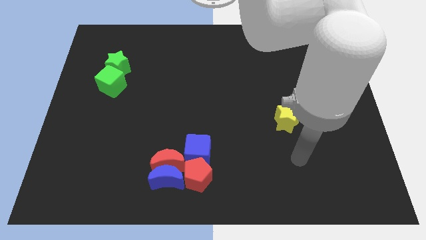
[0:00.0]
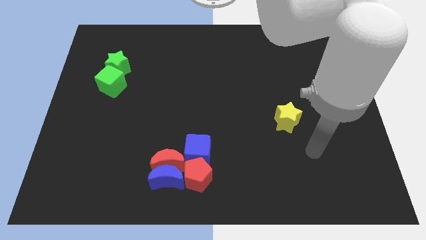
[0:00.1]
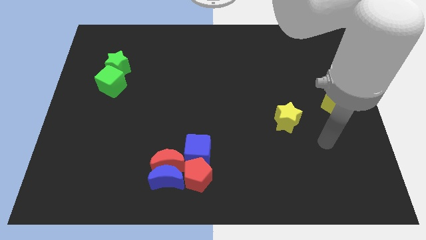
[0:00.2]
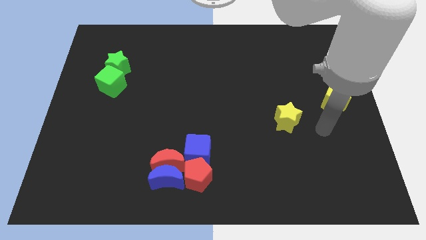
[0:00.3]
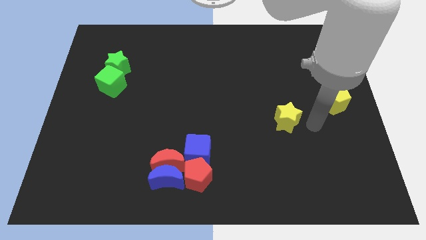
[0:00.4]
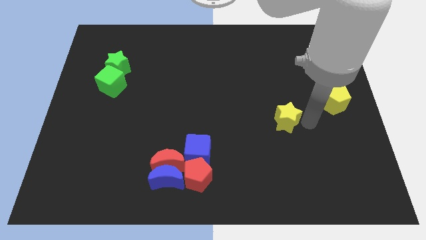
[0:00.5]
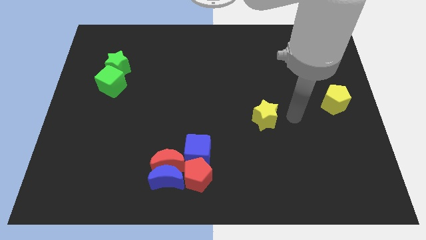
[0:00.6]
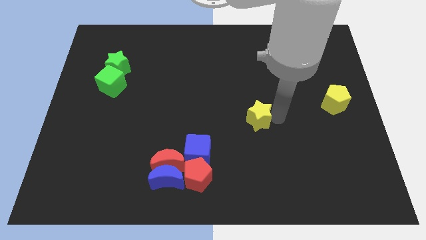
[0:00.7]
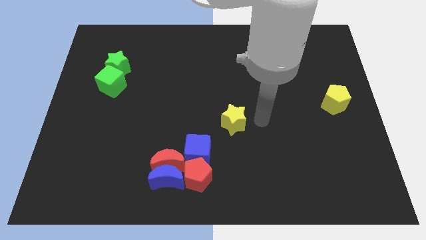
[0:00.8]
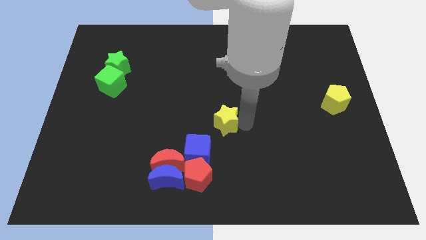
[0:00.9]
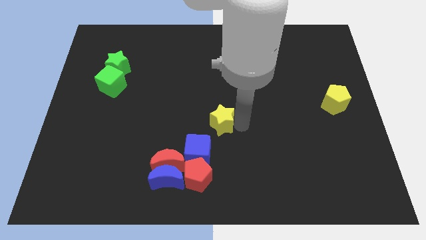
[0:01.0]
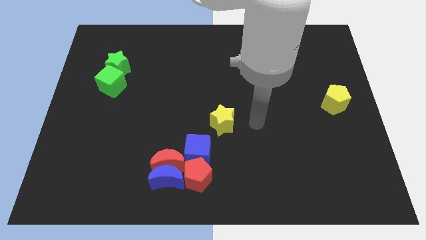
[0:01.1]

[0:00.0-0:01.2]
place the yellow star at the center of the board

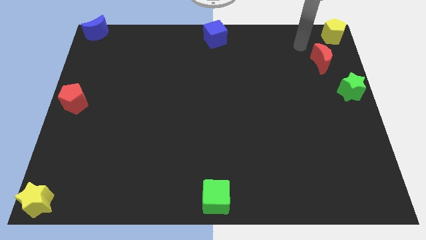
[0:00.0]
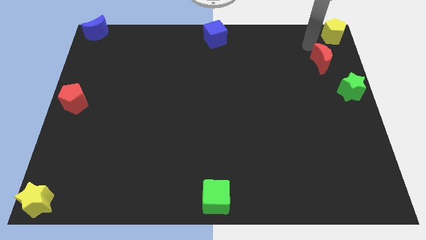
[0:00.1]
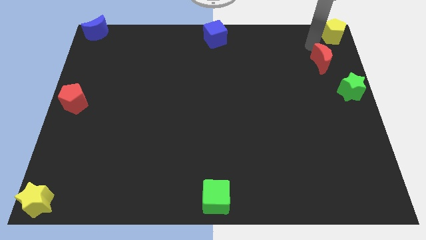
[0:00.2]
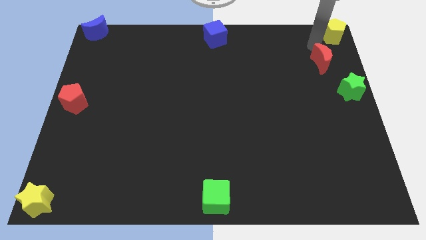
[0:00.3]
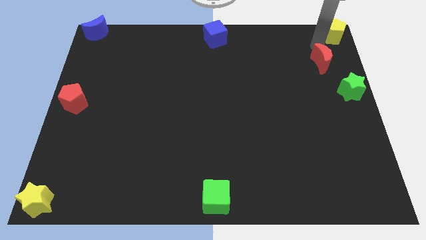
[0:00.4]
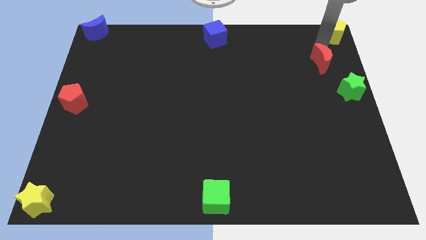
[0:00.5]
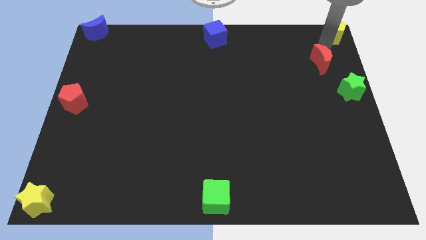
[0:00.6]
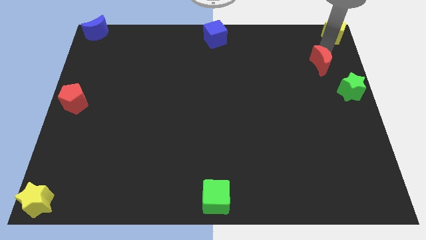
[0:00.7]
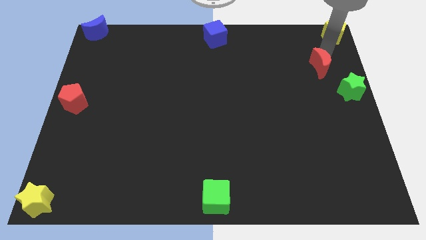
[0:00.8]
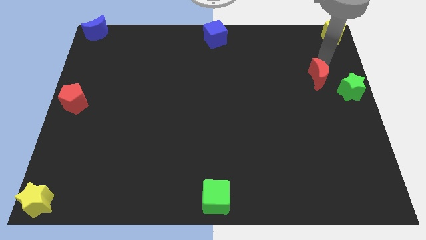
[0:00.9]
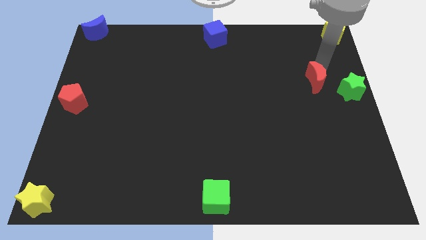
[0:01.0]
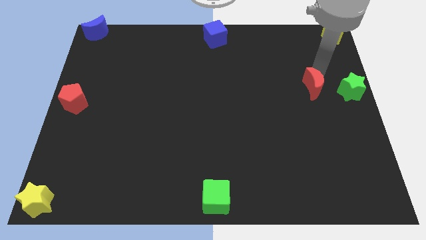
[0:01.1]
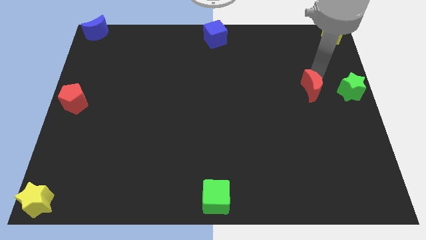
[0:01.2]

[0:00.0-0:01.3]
place the red moon parallel to the left of green star

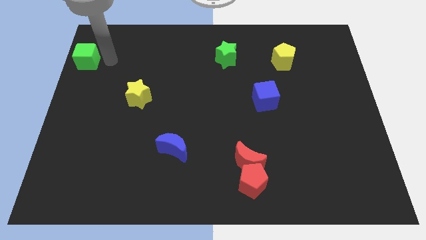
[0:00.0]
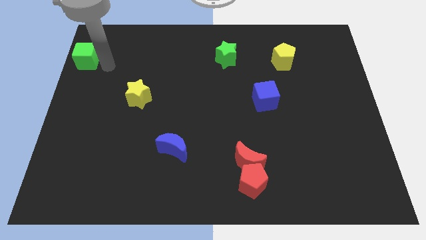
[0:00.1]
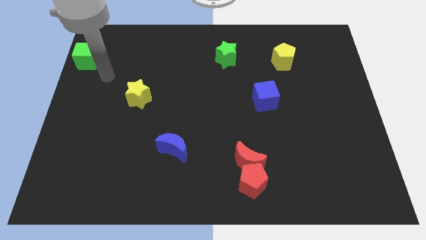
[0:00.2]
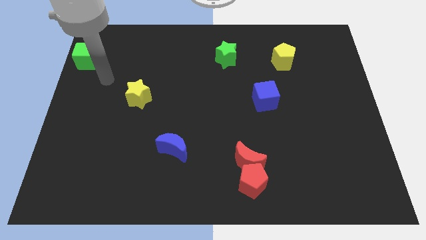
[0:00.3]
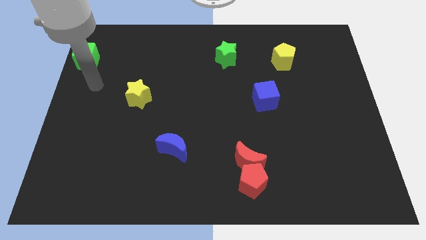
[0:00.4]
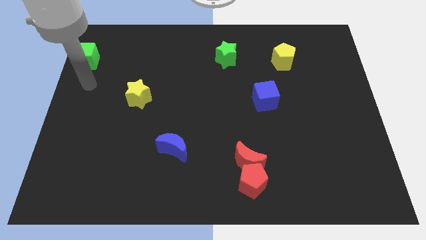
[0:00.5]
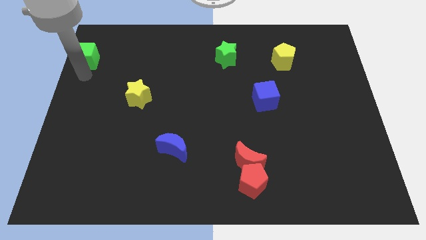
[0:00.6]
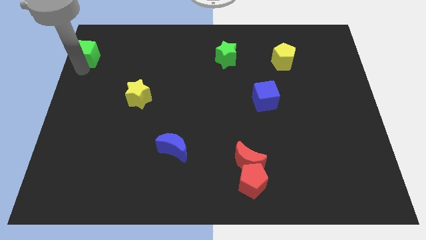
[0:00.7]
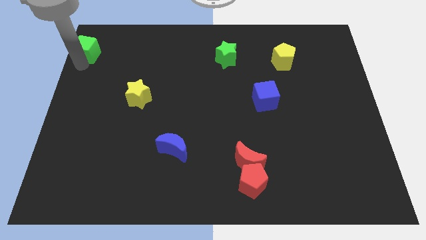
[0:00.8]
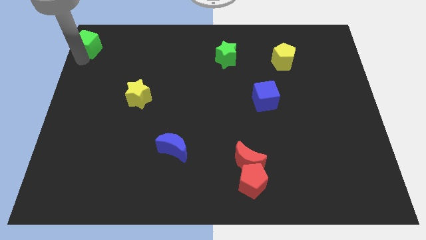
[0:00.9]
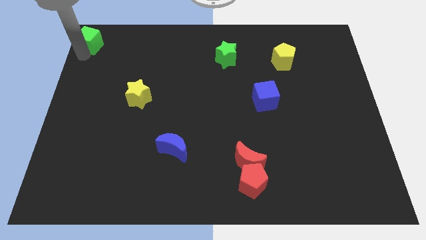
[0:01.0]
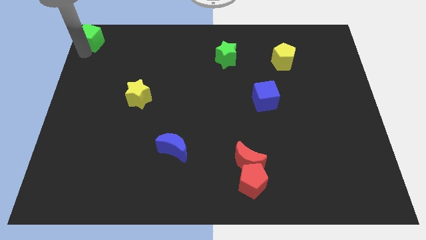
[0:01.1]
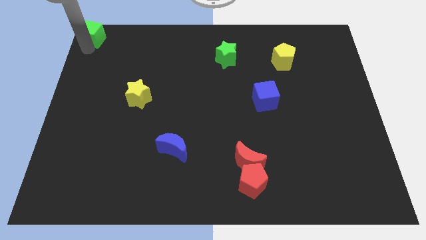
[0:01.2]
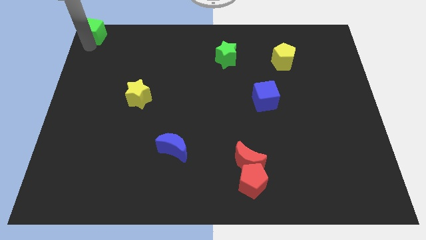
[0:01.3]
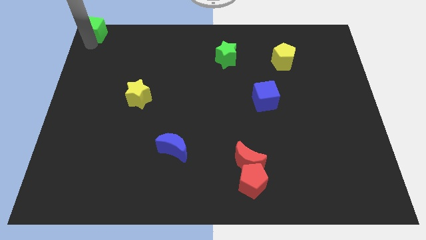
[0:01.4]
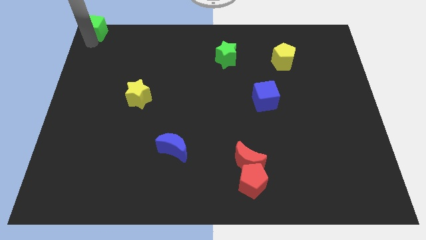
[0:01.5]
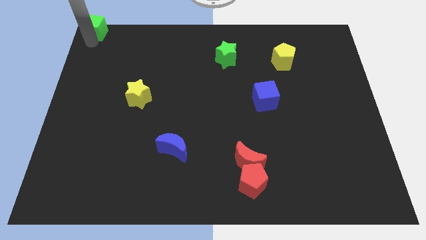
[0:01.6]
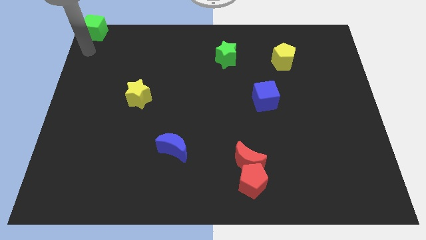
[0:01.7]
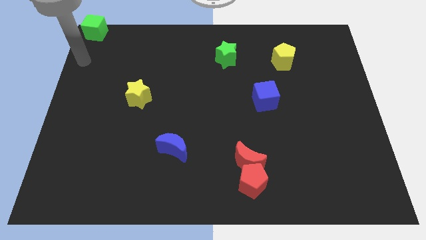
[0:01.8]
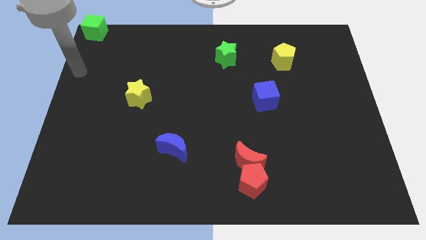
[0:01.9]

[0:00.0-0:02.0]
place the green cube to the top left corner

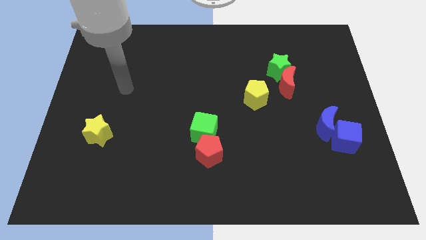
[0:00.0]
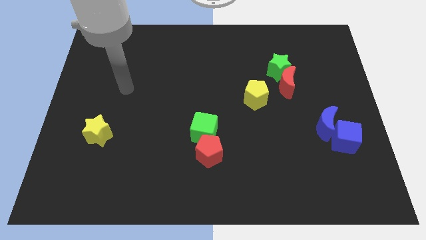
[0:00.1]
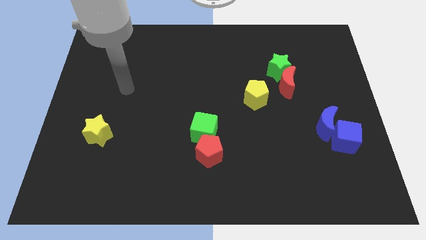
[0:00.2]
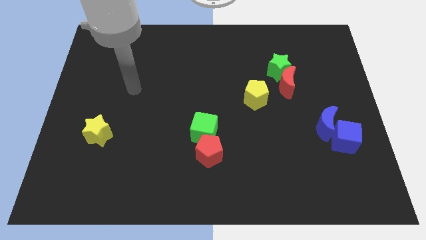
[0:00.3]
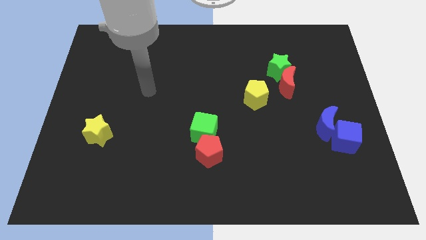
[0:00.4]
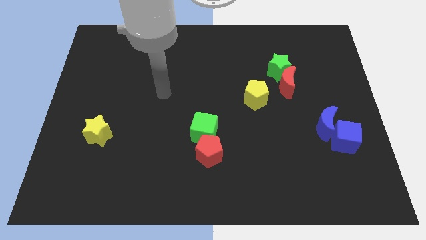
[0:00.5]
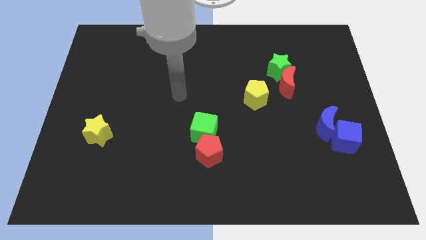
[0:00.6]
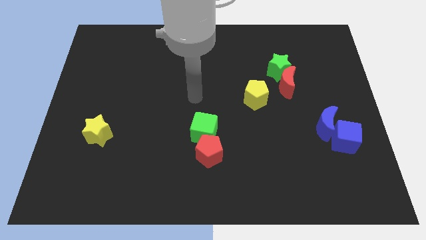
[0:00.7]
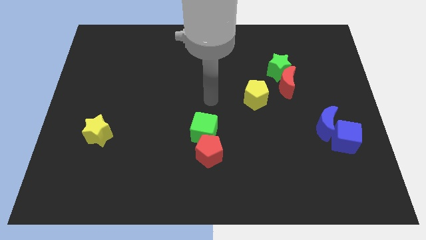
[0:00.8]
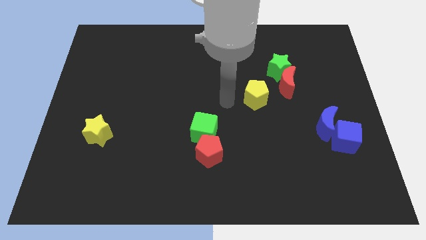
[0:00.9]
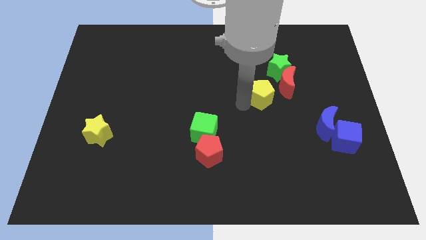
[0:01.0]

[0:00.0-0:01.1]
move your arm towards the yellow pentagon

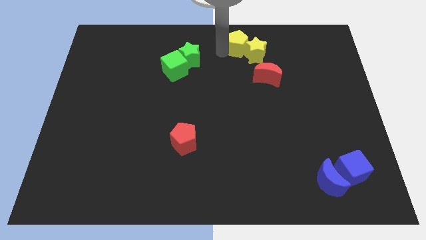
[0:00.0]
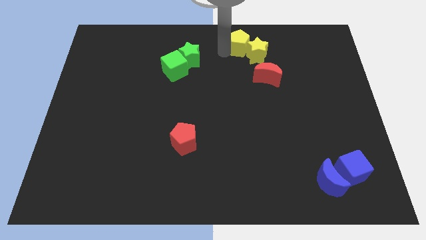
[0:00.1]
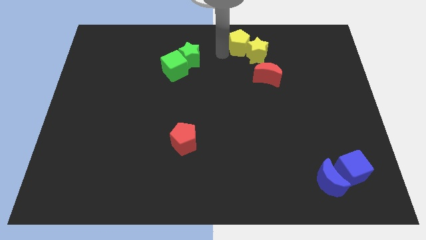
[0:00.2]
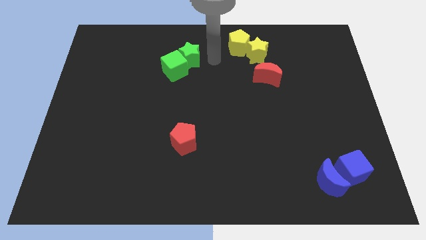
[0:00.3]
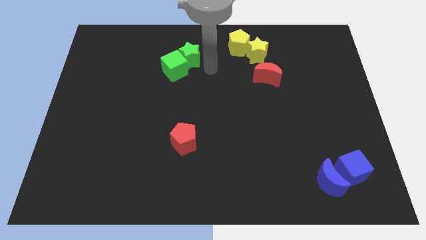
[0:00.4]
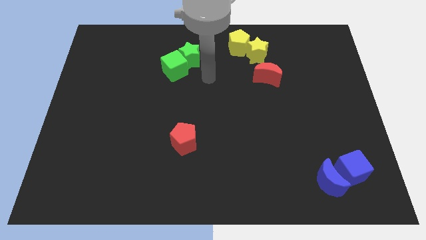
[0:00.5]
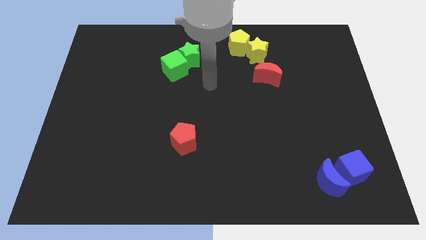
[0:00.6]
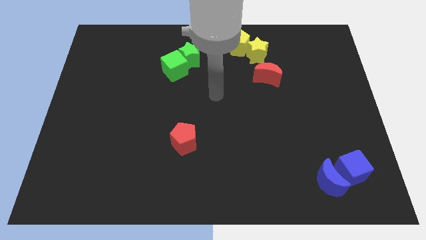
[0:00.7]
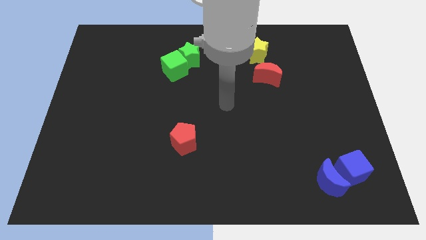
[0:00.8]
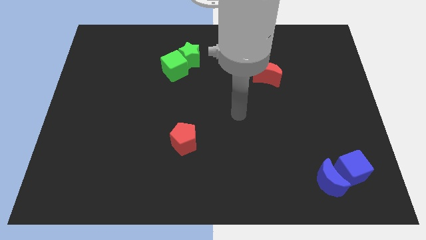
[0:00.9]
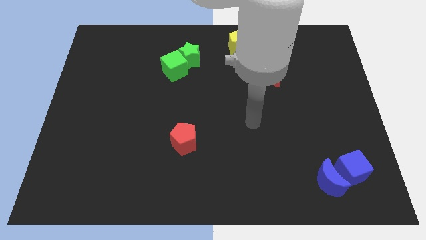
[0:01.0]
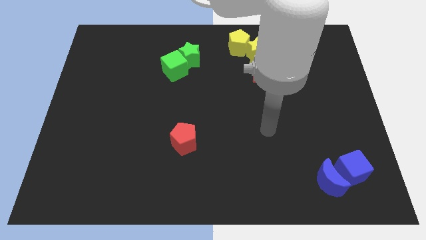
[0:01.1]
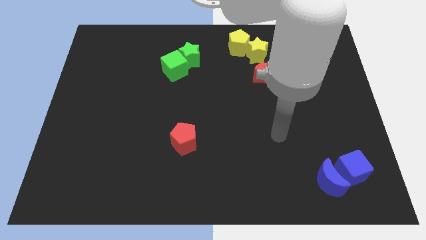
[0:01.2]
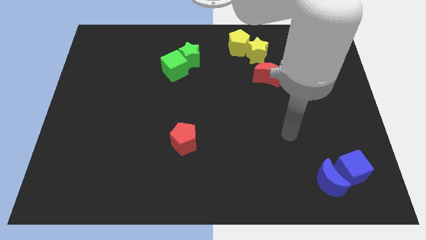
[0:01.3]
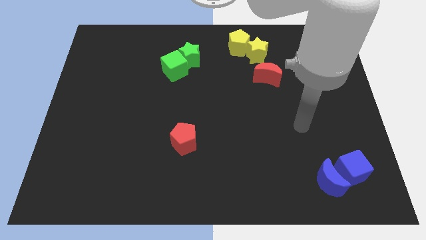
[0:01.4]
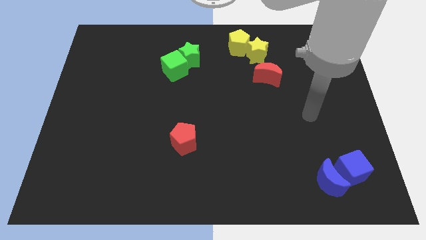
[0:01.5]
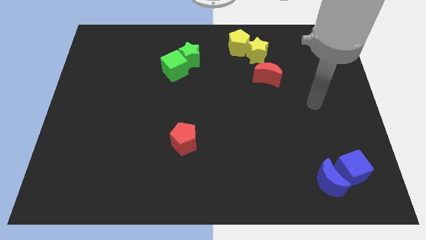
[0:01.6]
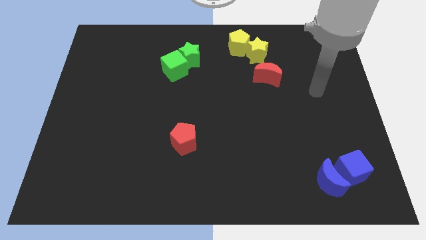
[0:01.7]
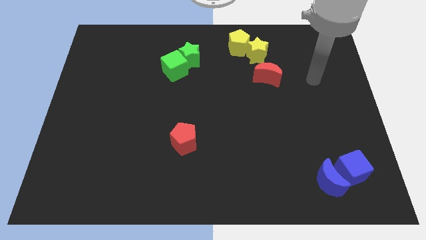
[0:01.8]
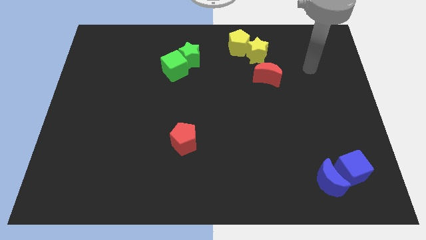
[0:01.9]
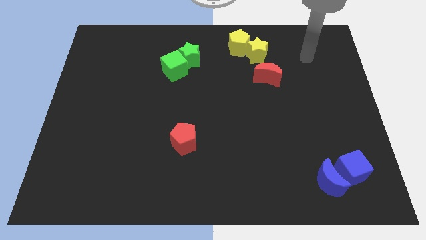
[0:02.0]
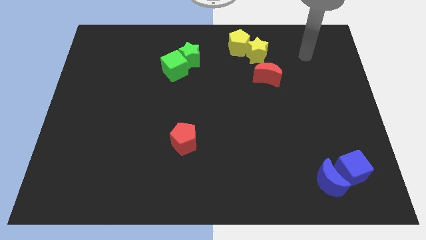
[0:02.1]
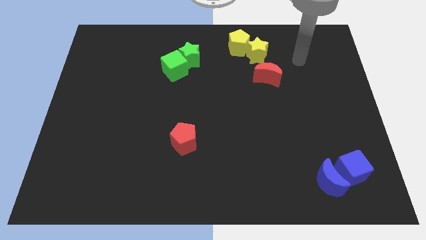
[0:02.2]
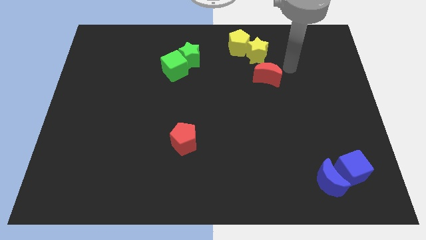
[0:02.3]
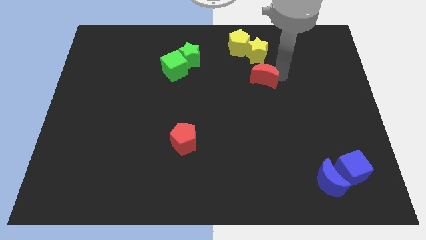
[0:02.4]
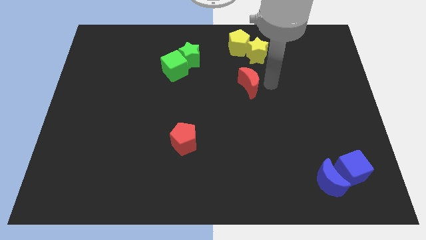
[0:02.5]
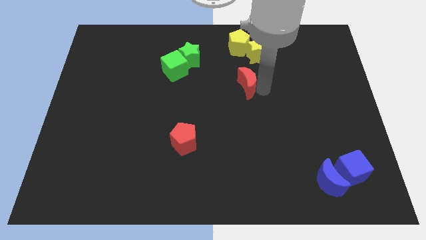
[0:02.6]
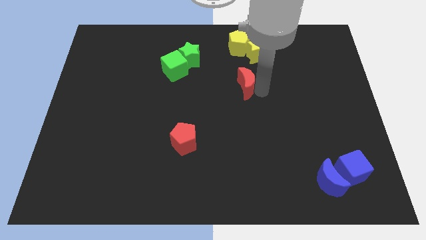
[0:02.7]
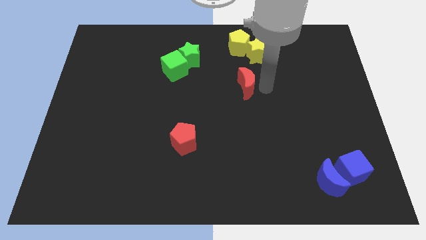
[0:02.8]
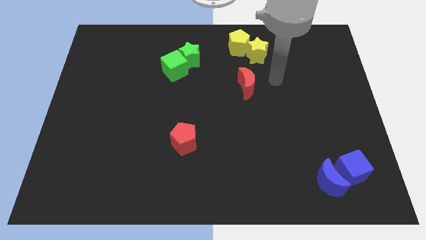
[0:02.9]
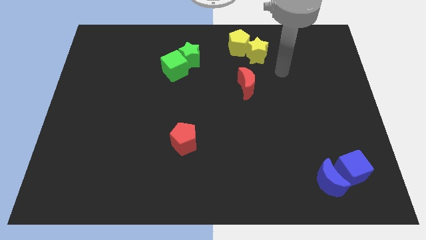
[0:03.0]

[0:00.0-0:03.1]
move the red crescent below the group of yellow blocks
